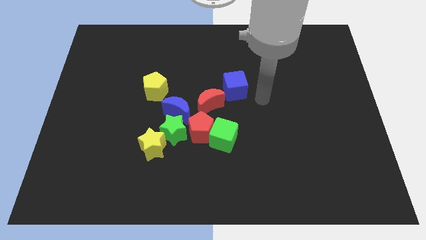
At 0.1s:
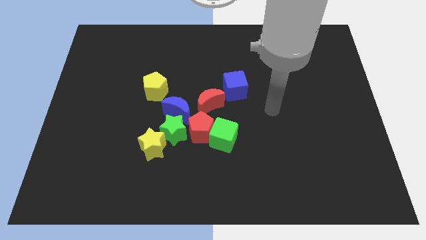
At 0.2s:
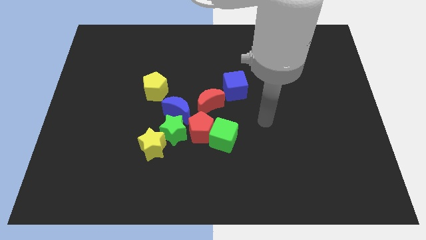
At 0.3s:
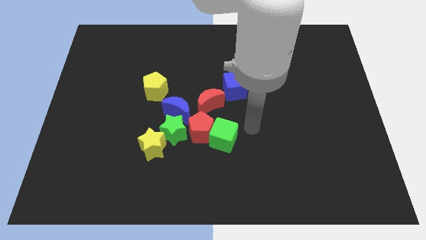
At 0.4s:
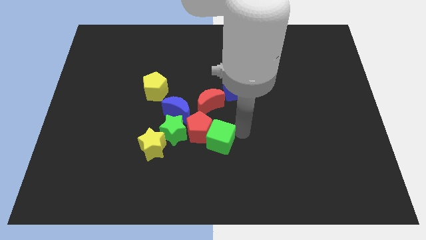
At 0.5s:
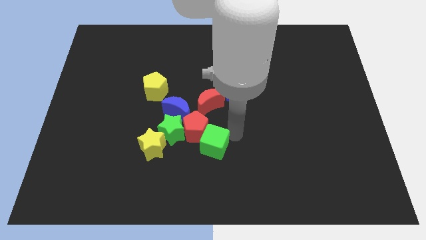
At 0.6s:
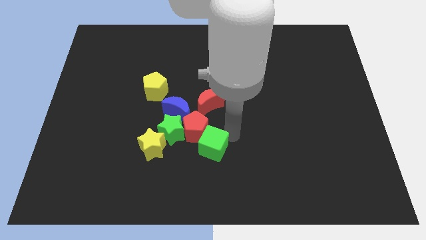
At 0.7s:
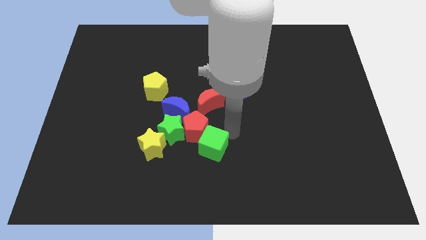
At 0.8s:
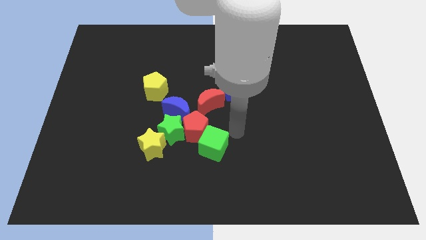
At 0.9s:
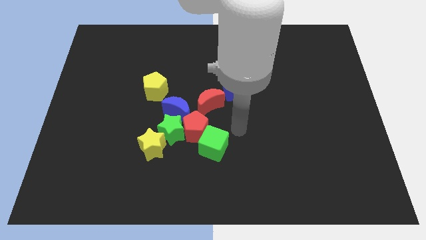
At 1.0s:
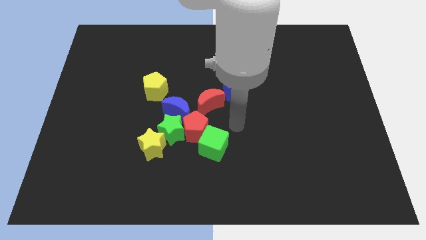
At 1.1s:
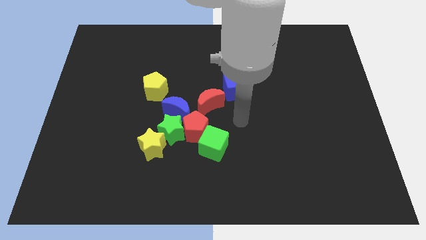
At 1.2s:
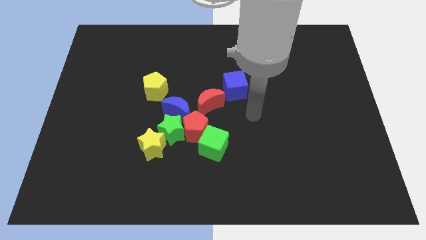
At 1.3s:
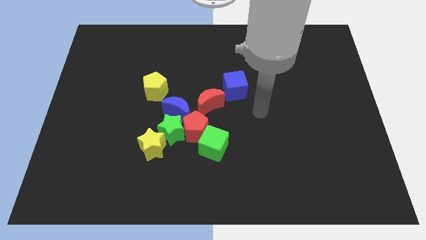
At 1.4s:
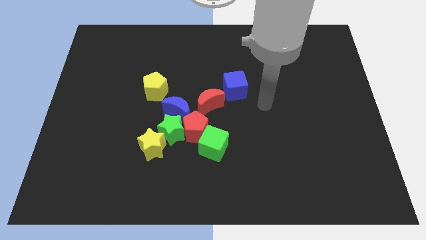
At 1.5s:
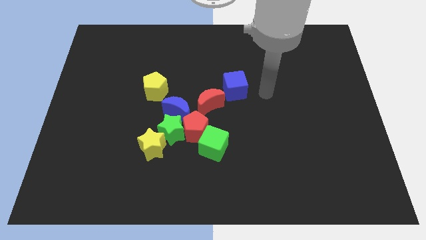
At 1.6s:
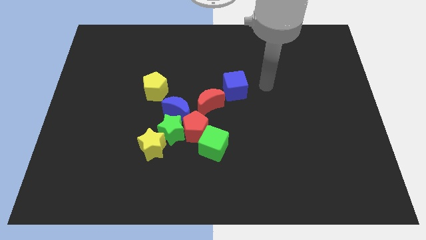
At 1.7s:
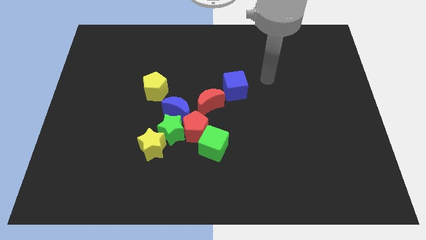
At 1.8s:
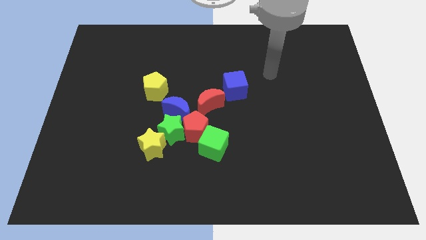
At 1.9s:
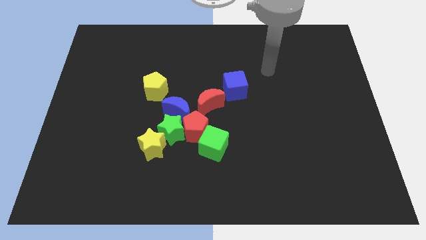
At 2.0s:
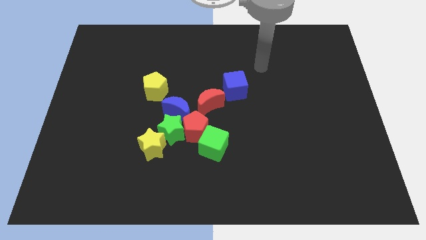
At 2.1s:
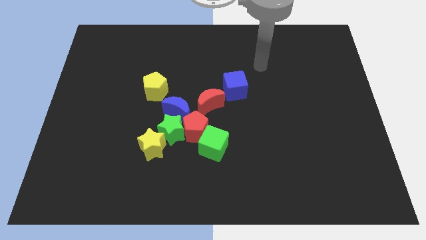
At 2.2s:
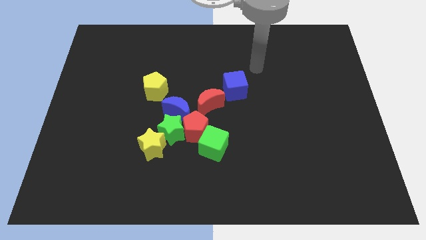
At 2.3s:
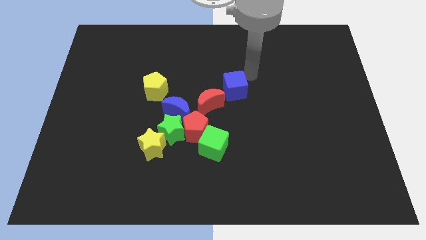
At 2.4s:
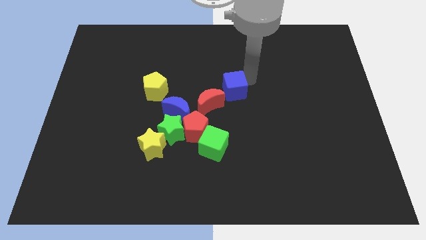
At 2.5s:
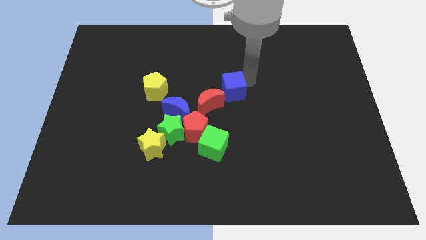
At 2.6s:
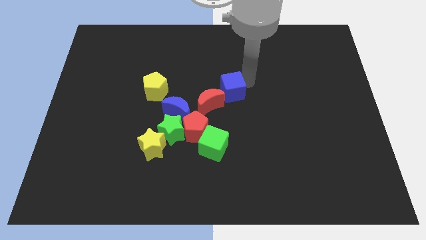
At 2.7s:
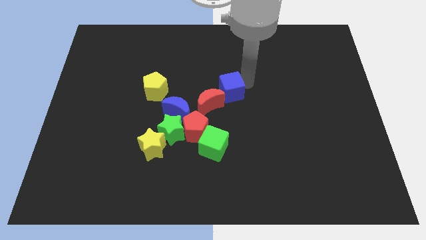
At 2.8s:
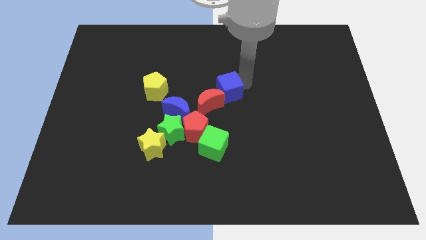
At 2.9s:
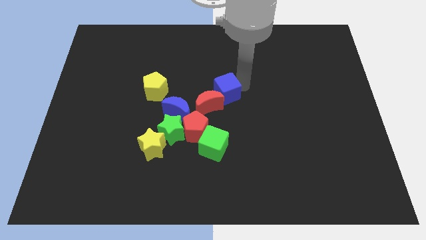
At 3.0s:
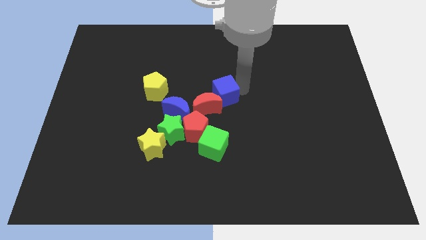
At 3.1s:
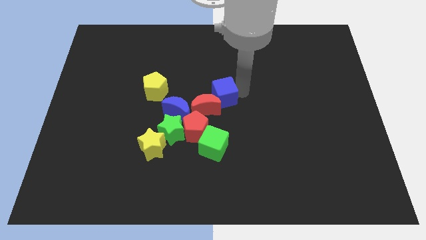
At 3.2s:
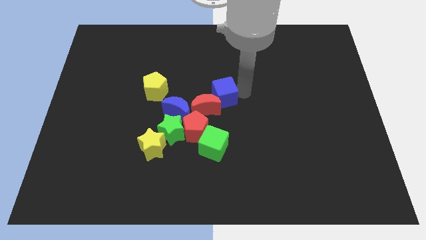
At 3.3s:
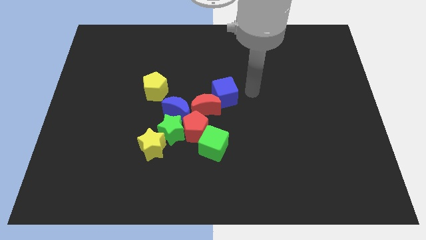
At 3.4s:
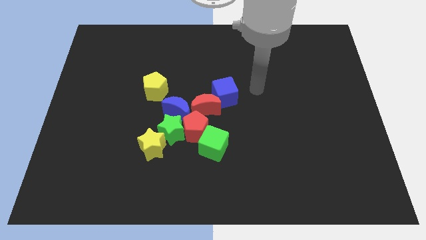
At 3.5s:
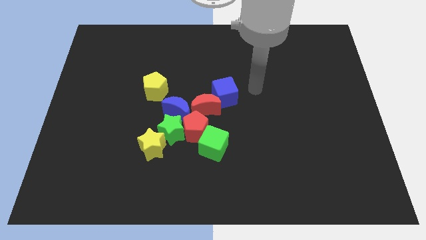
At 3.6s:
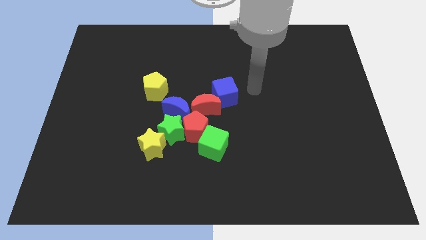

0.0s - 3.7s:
push the green cube and blue cube into the group of blocks

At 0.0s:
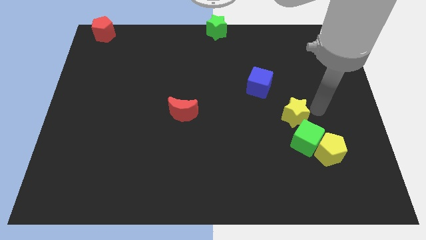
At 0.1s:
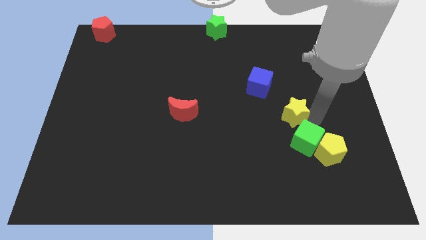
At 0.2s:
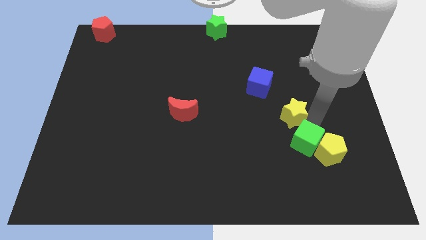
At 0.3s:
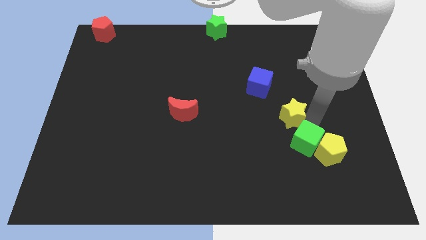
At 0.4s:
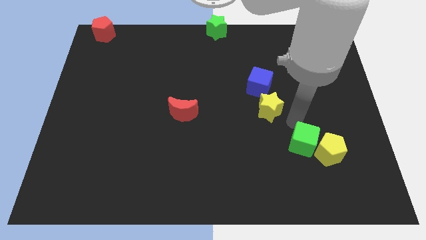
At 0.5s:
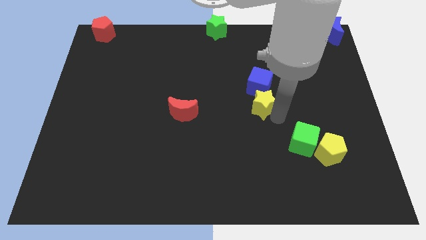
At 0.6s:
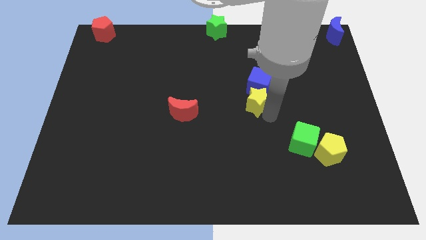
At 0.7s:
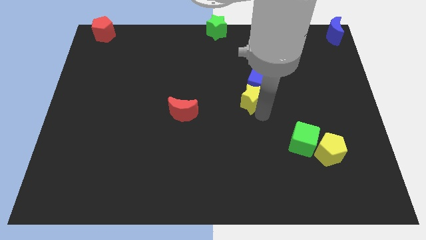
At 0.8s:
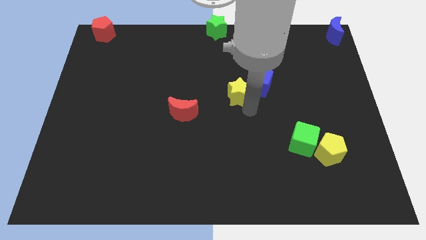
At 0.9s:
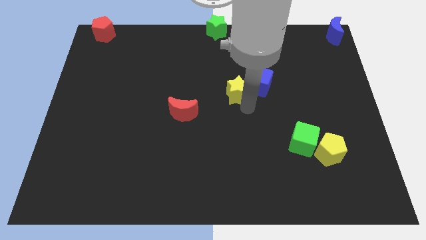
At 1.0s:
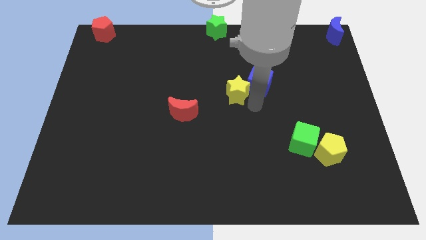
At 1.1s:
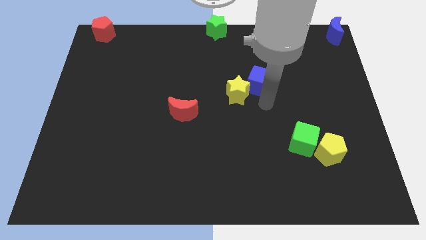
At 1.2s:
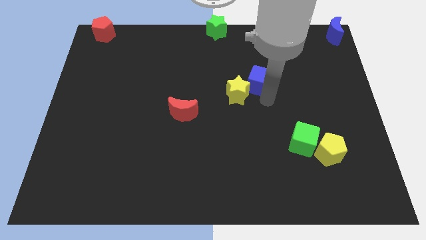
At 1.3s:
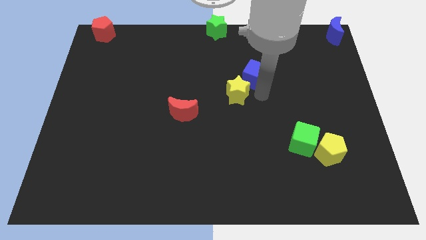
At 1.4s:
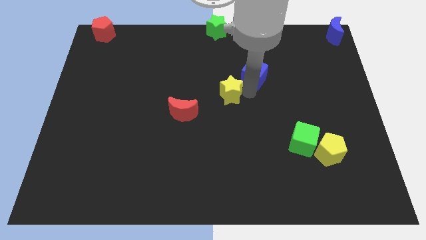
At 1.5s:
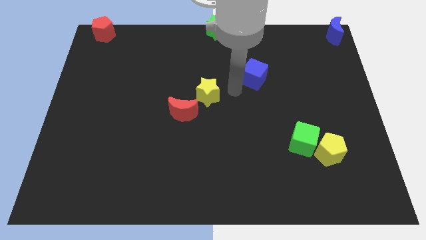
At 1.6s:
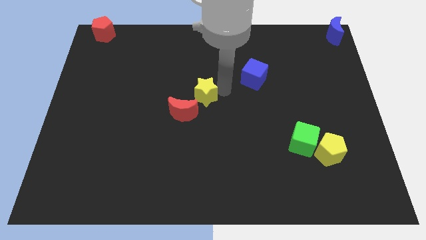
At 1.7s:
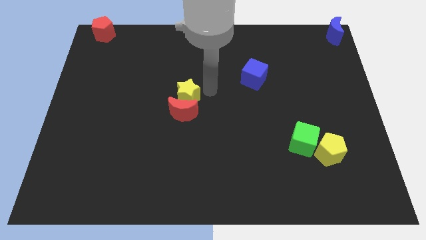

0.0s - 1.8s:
place the yellow star above the red crescent

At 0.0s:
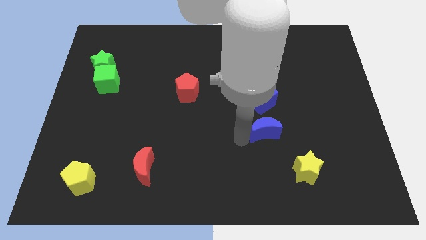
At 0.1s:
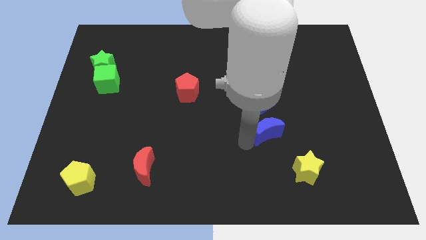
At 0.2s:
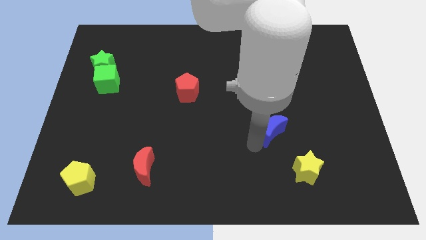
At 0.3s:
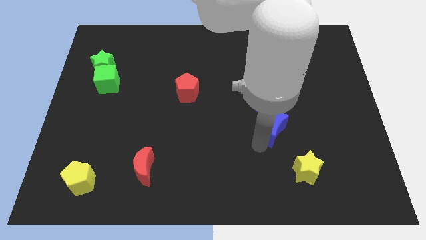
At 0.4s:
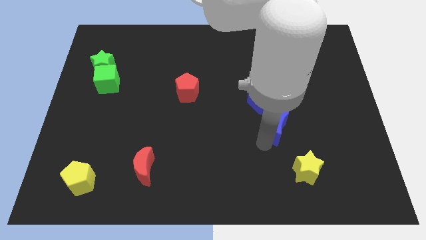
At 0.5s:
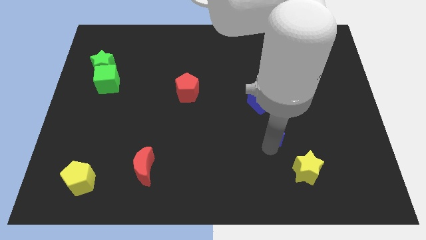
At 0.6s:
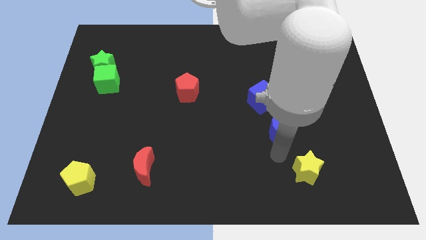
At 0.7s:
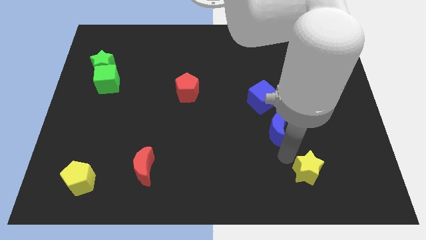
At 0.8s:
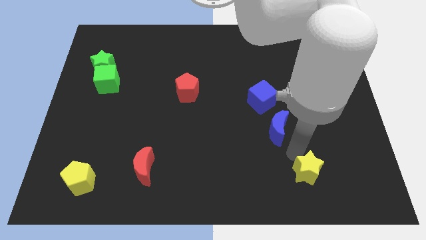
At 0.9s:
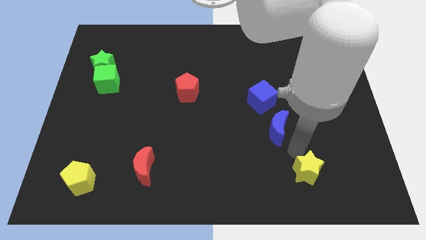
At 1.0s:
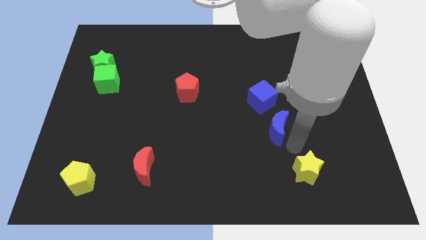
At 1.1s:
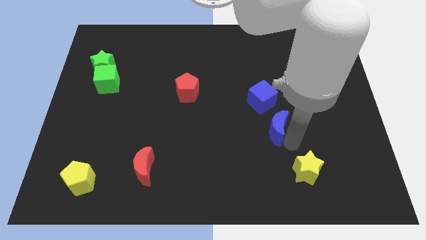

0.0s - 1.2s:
move the blue crescent vertical to the blue cube

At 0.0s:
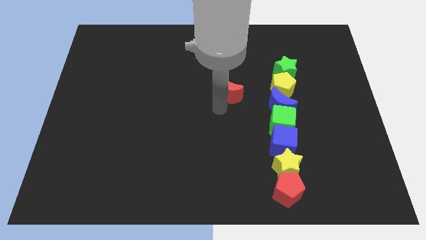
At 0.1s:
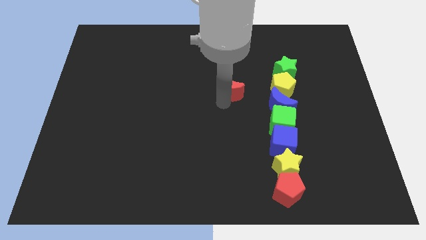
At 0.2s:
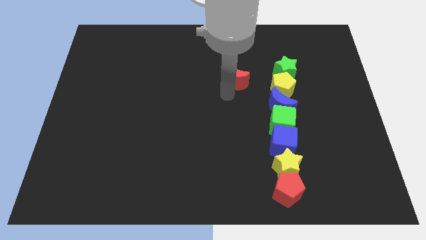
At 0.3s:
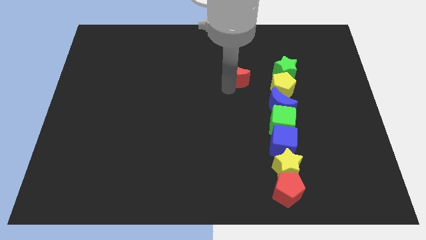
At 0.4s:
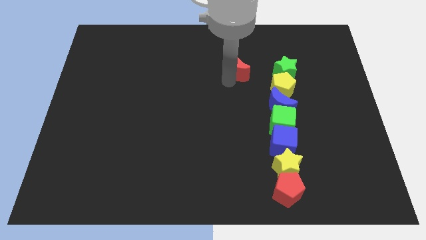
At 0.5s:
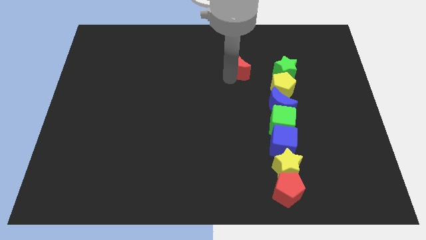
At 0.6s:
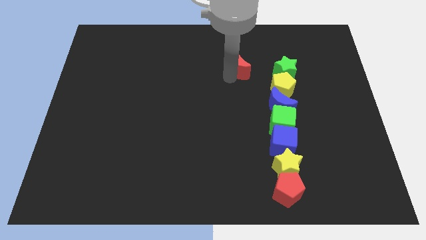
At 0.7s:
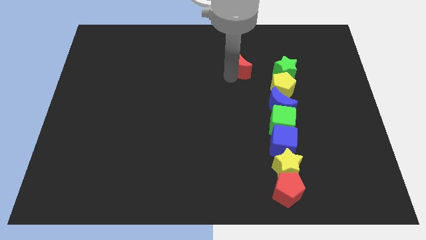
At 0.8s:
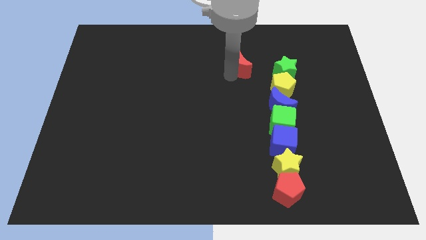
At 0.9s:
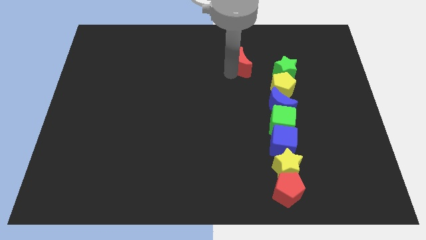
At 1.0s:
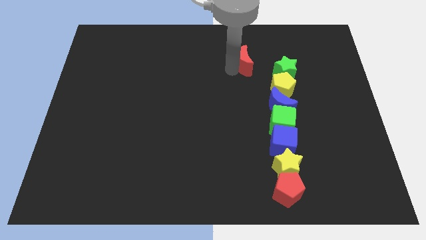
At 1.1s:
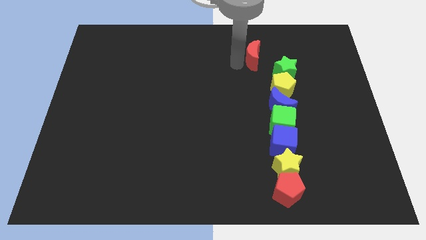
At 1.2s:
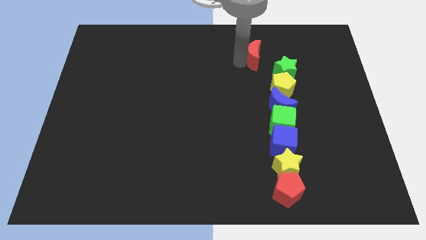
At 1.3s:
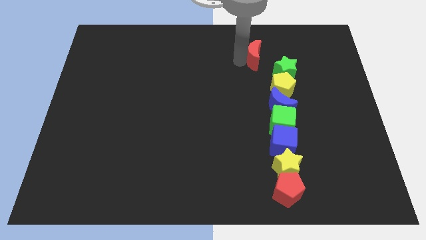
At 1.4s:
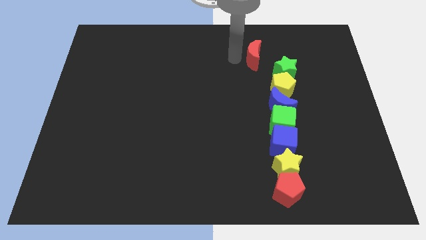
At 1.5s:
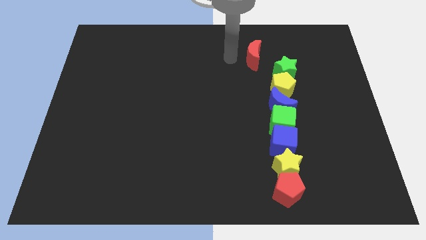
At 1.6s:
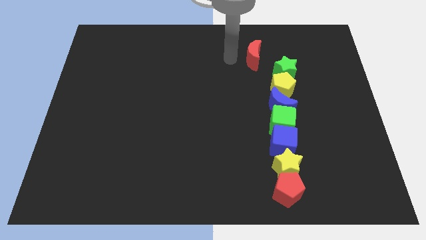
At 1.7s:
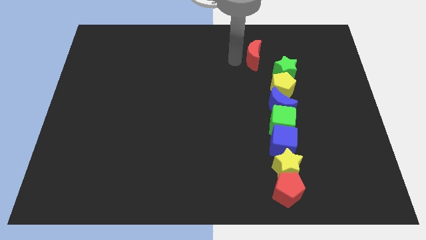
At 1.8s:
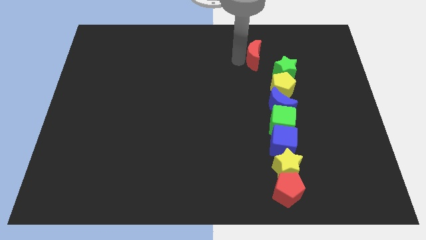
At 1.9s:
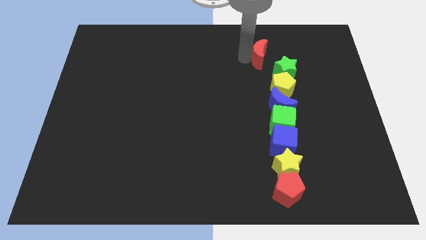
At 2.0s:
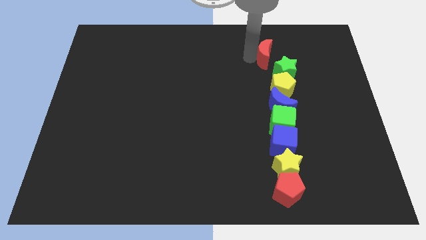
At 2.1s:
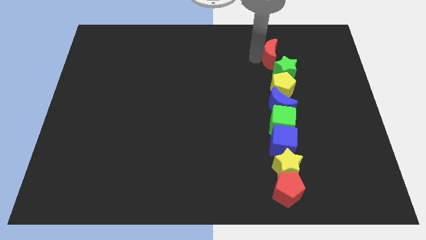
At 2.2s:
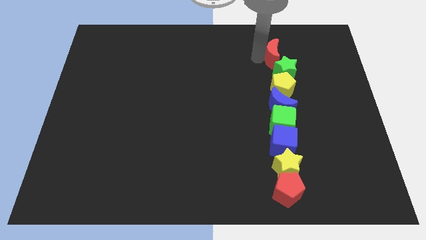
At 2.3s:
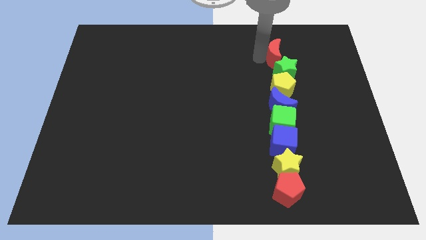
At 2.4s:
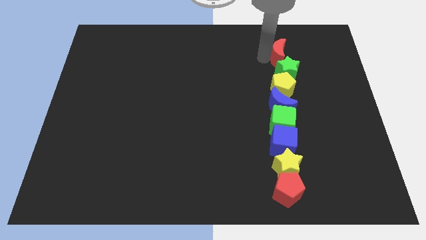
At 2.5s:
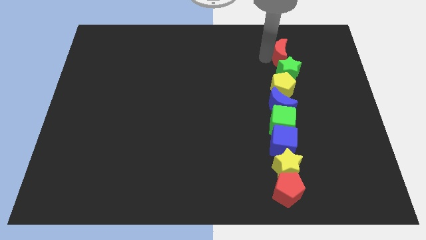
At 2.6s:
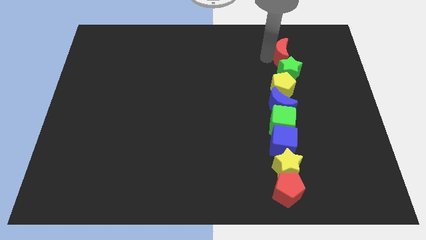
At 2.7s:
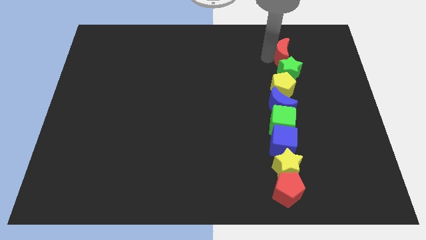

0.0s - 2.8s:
move the red moon into the green star
